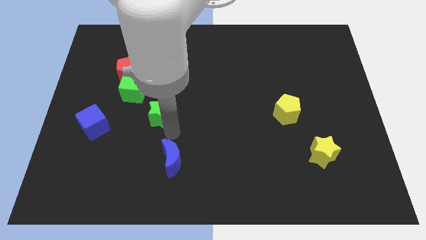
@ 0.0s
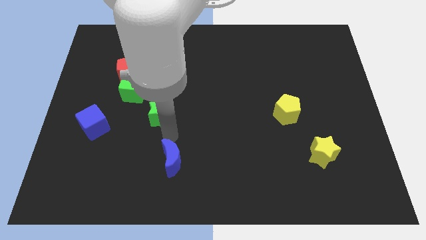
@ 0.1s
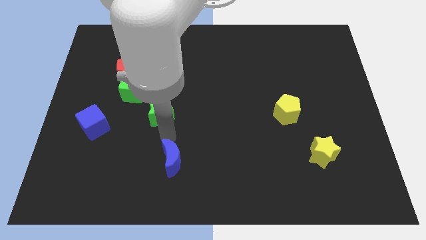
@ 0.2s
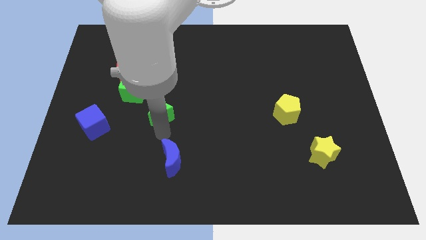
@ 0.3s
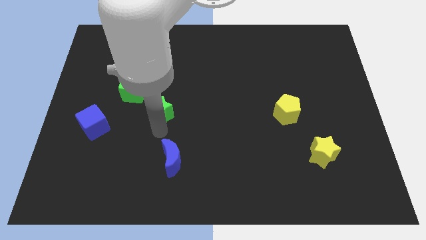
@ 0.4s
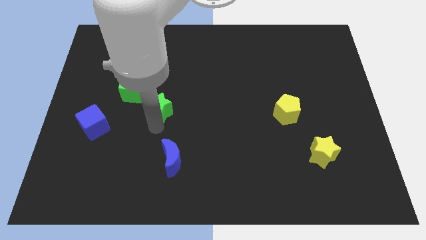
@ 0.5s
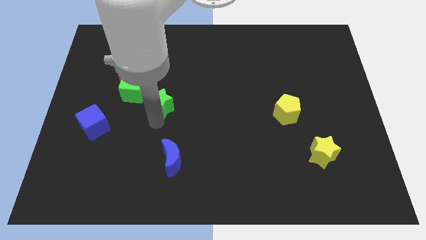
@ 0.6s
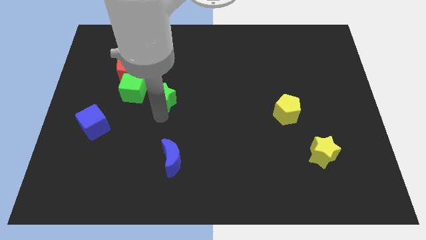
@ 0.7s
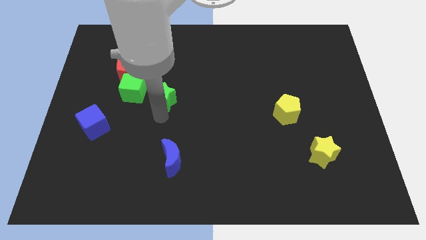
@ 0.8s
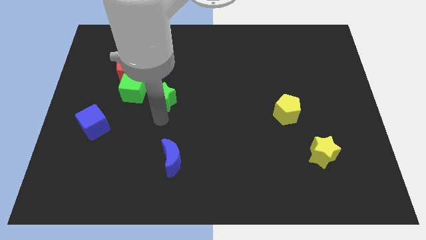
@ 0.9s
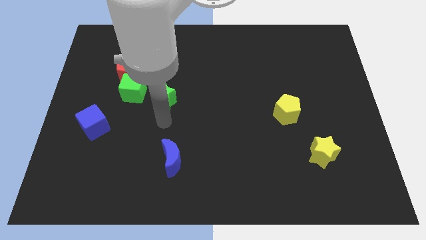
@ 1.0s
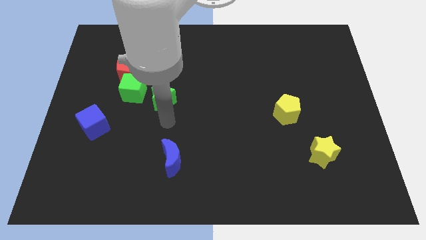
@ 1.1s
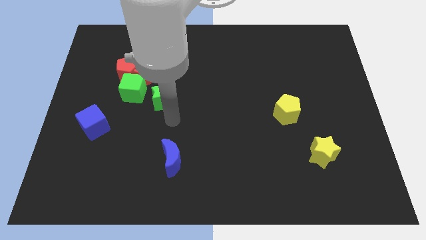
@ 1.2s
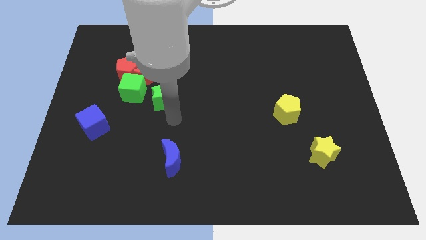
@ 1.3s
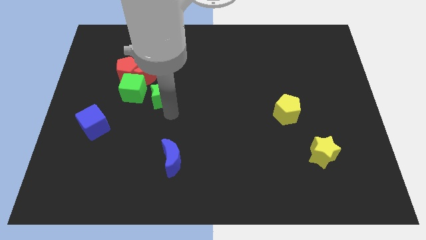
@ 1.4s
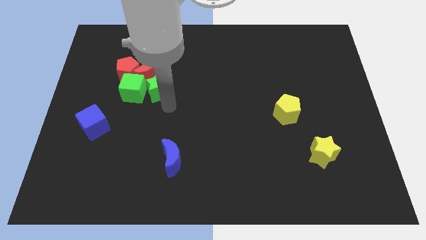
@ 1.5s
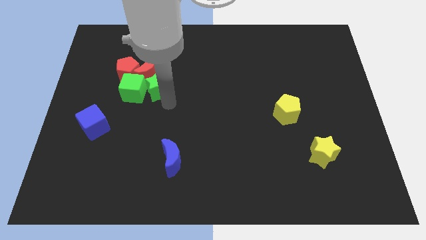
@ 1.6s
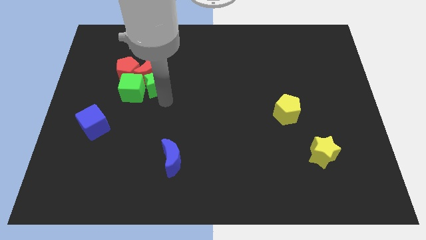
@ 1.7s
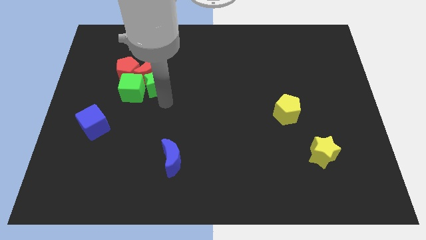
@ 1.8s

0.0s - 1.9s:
move the green star into the green cube

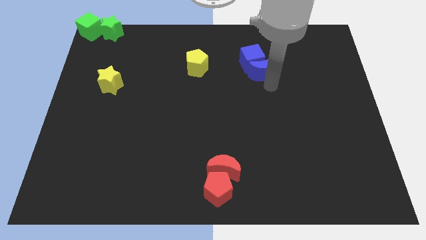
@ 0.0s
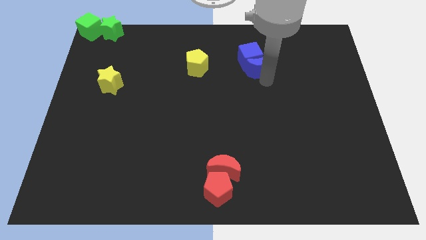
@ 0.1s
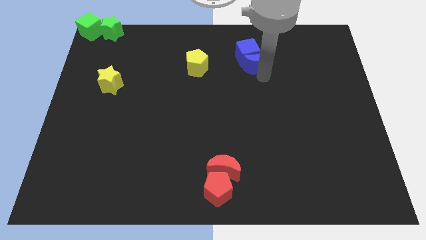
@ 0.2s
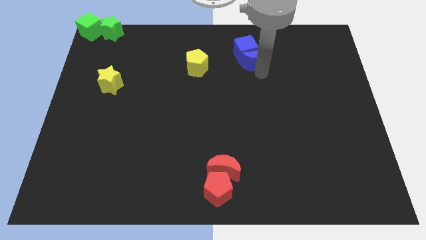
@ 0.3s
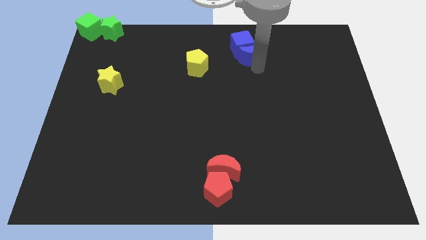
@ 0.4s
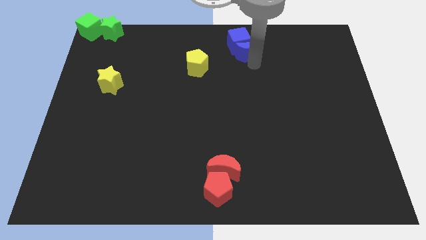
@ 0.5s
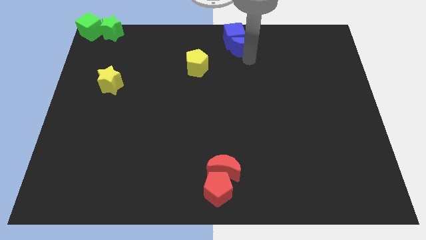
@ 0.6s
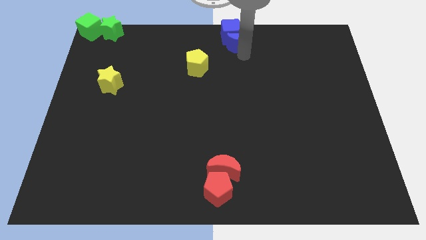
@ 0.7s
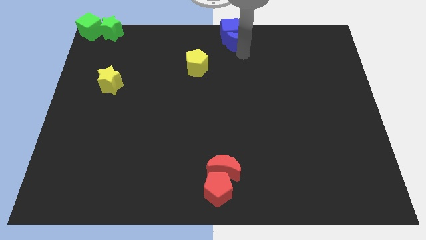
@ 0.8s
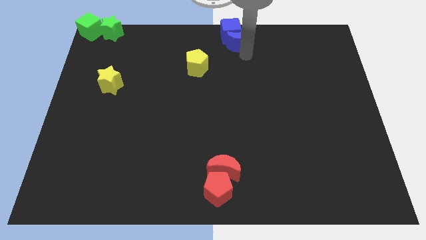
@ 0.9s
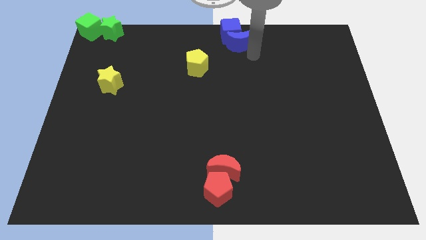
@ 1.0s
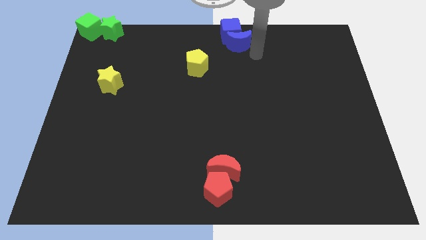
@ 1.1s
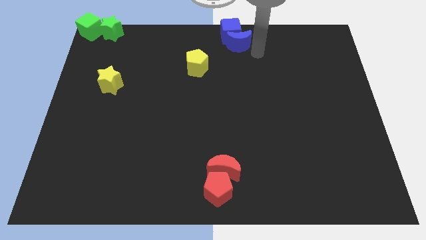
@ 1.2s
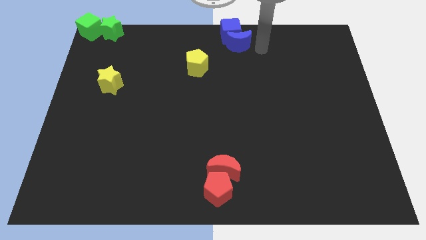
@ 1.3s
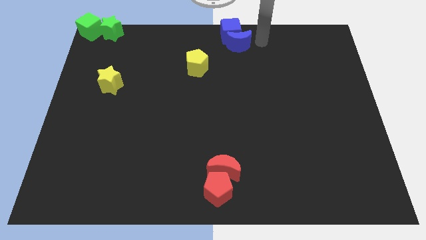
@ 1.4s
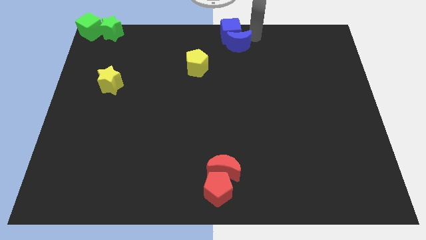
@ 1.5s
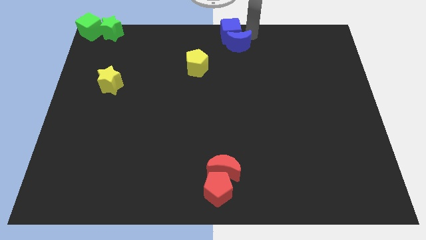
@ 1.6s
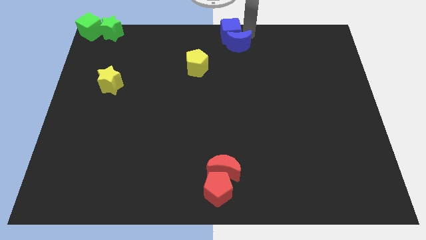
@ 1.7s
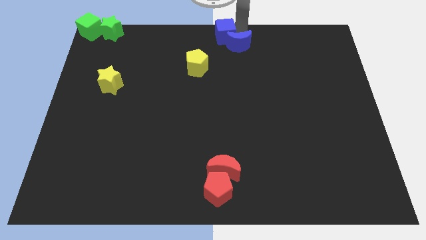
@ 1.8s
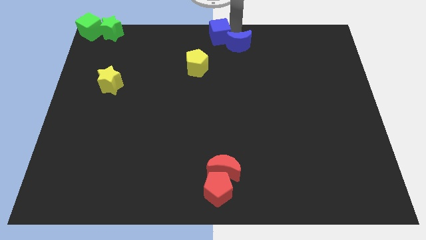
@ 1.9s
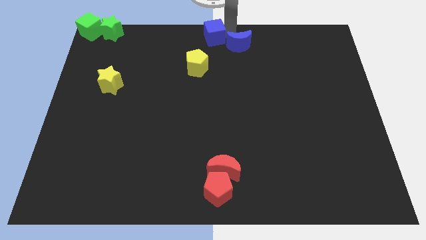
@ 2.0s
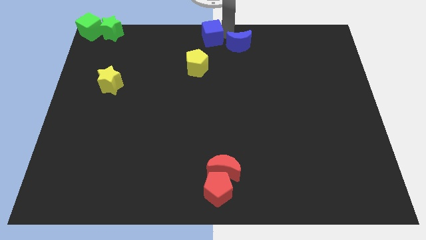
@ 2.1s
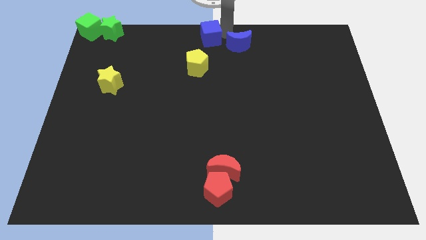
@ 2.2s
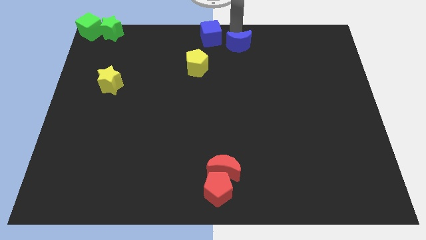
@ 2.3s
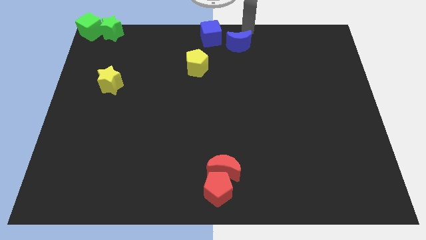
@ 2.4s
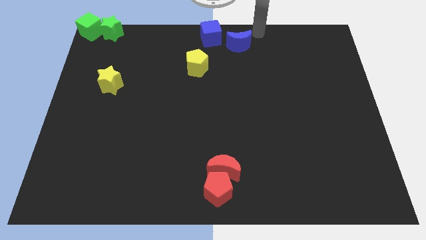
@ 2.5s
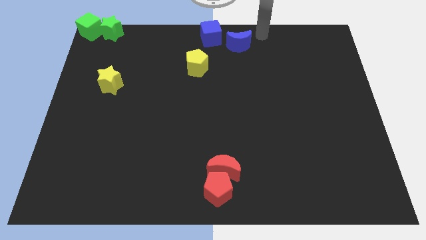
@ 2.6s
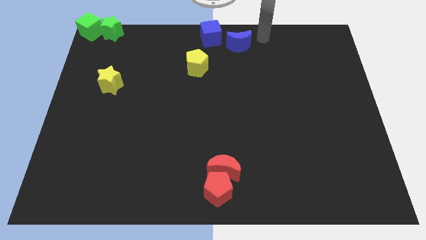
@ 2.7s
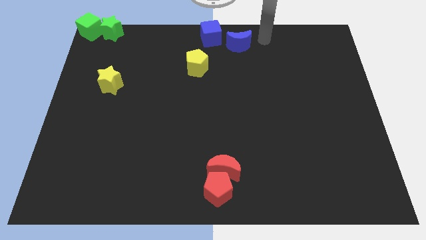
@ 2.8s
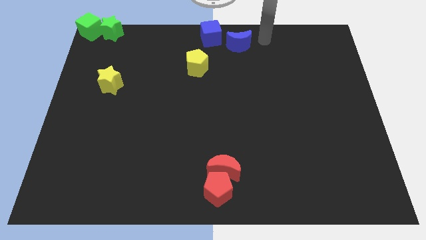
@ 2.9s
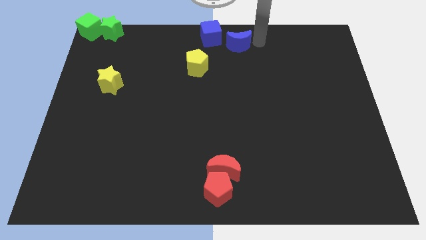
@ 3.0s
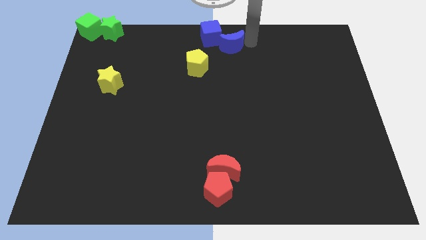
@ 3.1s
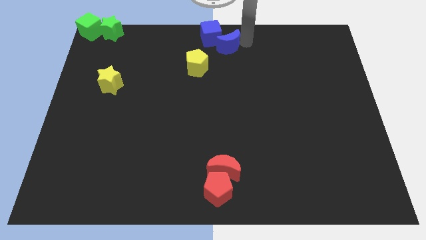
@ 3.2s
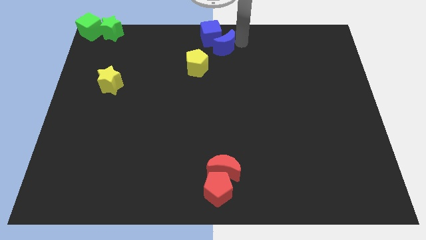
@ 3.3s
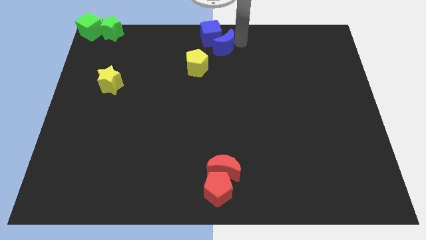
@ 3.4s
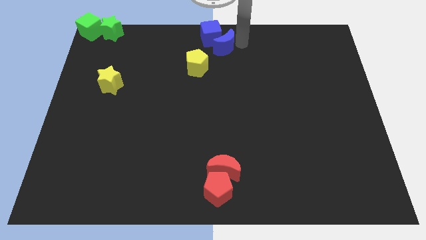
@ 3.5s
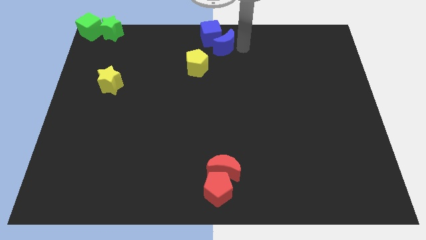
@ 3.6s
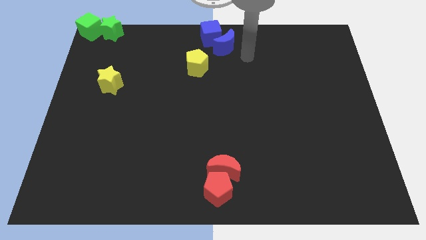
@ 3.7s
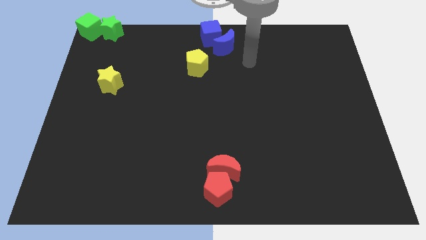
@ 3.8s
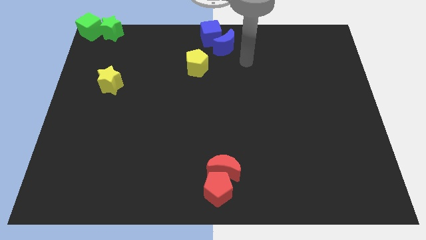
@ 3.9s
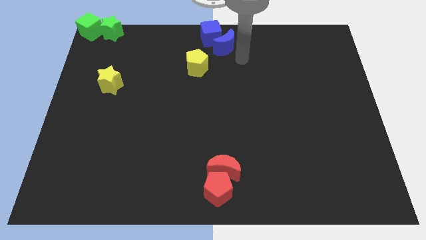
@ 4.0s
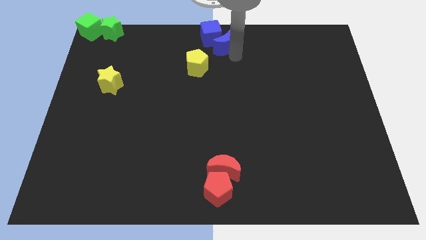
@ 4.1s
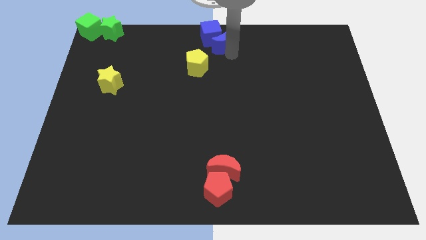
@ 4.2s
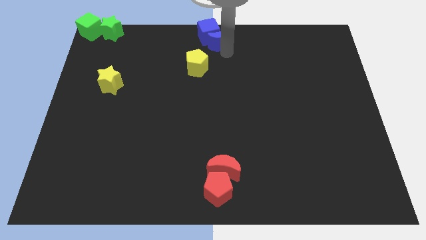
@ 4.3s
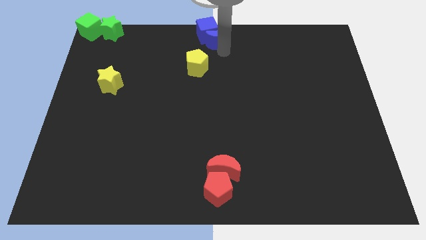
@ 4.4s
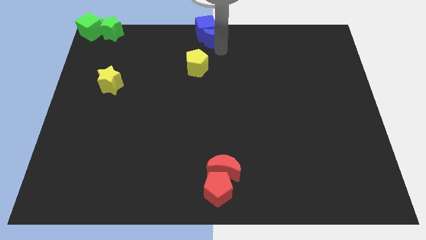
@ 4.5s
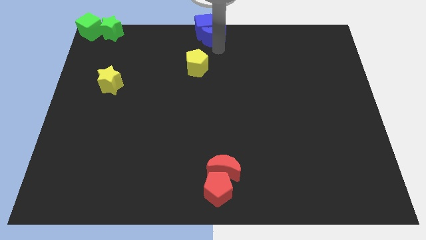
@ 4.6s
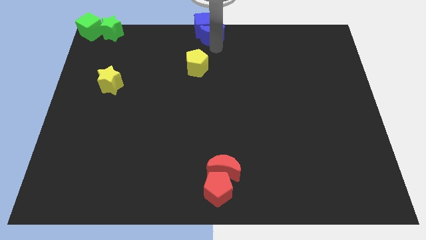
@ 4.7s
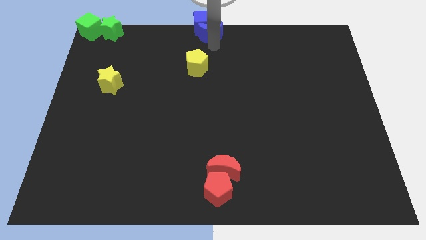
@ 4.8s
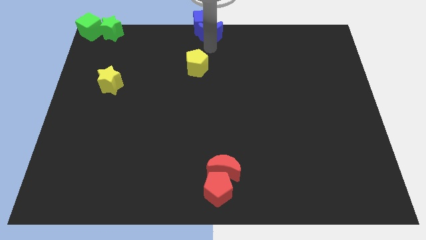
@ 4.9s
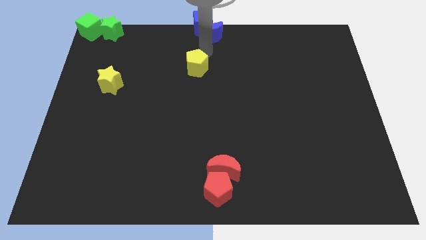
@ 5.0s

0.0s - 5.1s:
move the blue crescent and blue cube to the top side of the yellow pentagon

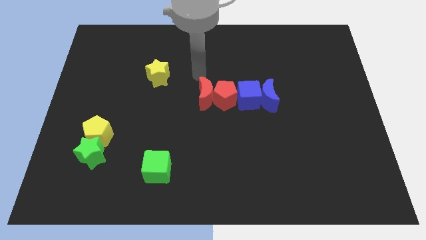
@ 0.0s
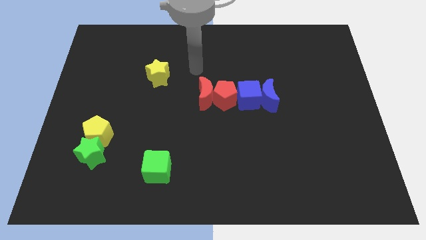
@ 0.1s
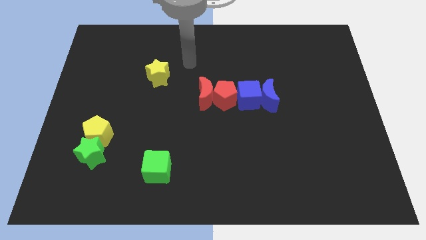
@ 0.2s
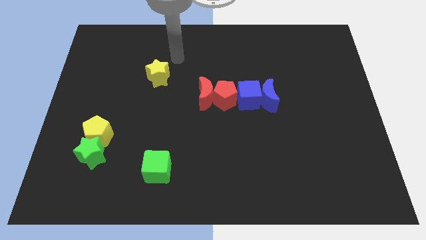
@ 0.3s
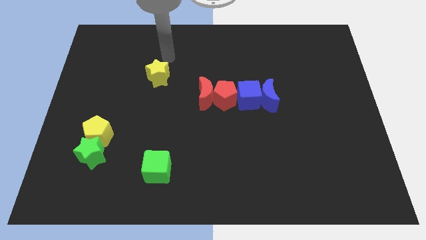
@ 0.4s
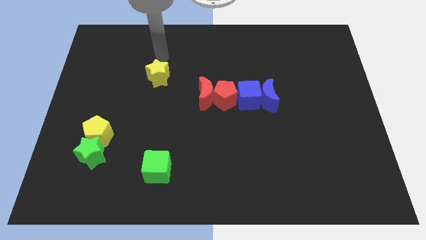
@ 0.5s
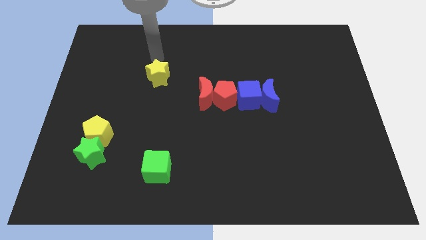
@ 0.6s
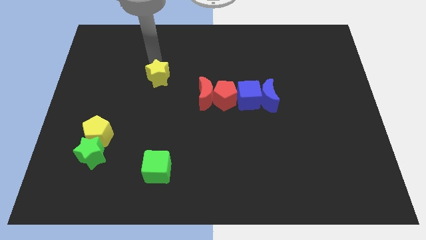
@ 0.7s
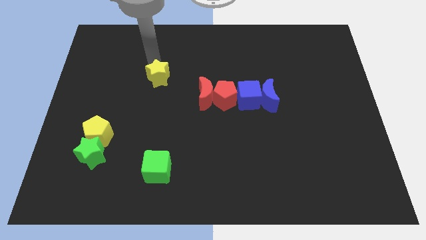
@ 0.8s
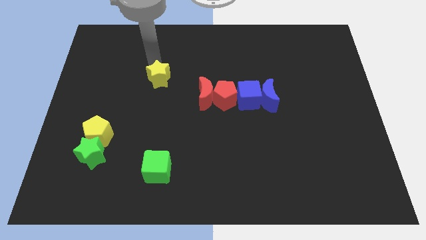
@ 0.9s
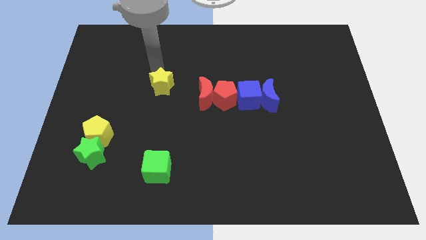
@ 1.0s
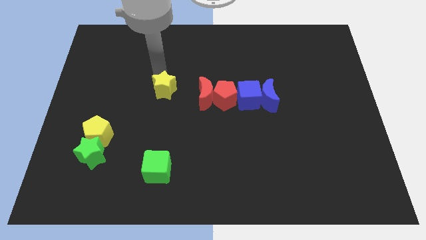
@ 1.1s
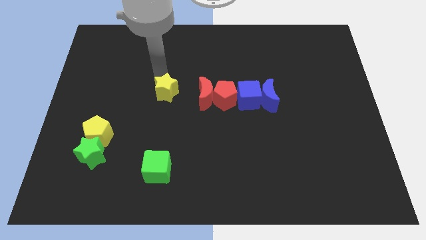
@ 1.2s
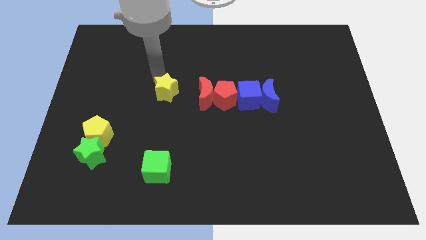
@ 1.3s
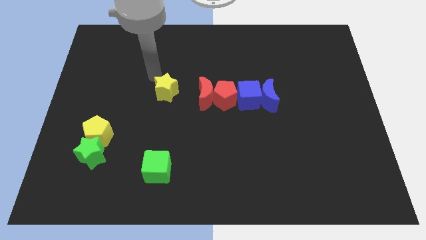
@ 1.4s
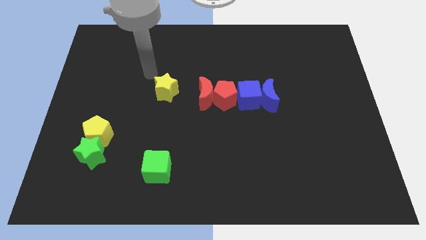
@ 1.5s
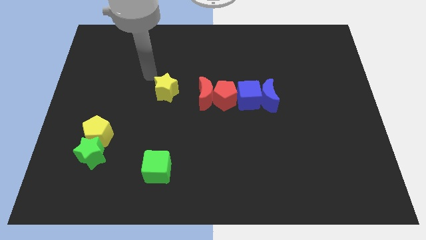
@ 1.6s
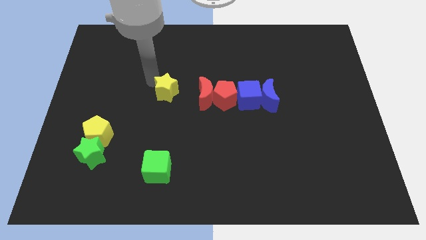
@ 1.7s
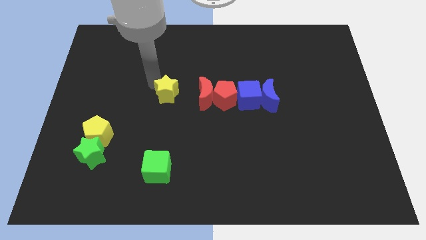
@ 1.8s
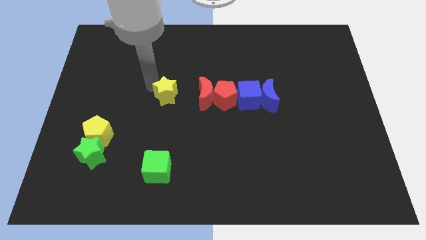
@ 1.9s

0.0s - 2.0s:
slide the yellow star to the left of the red moon
